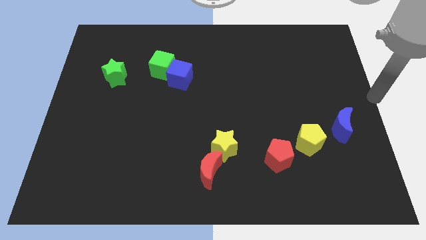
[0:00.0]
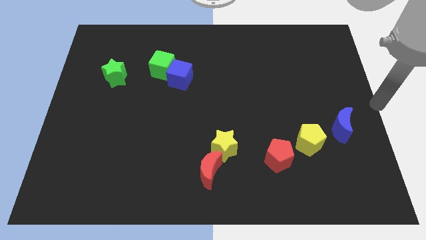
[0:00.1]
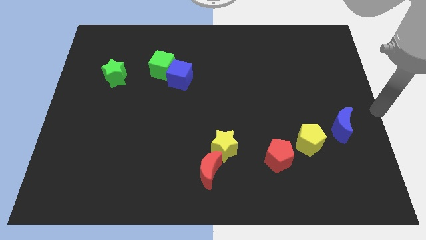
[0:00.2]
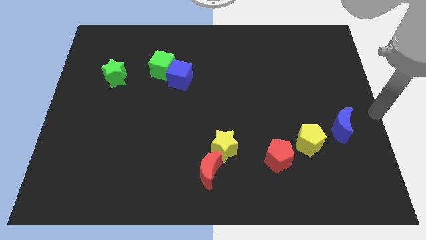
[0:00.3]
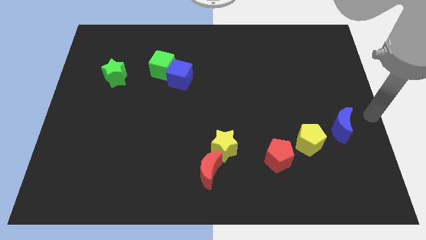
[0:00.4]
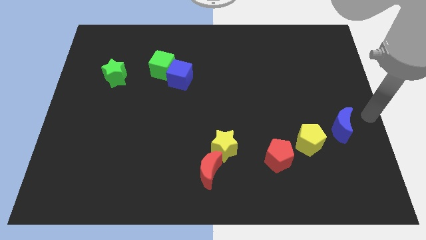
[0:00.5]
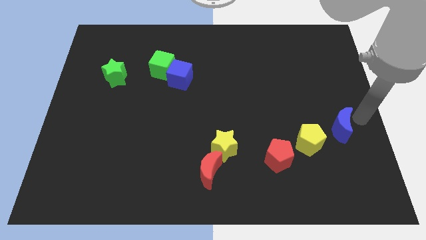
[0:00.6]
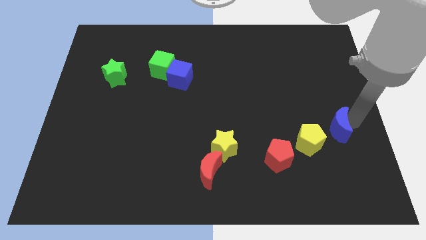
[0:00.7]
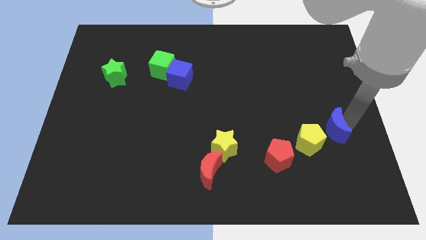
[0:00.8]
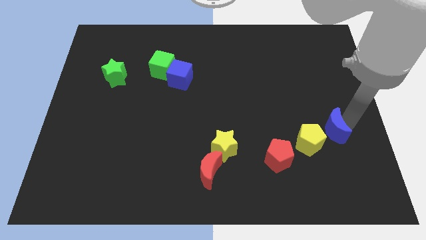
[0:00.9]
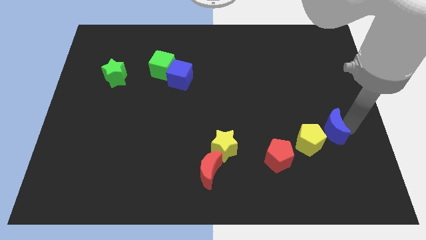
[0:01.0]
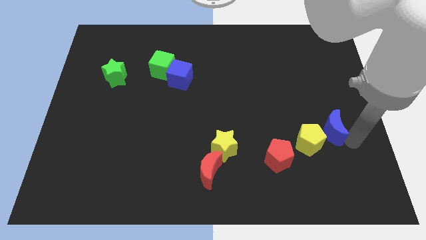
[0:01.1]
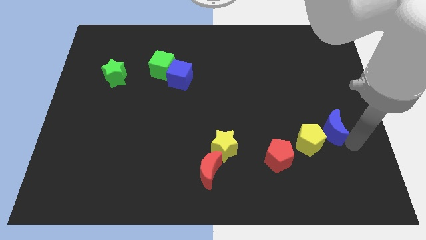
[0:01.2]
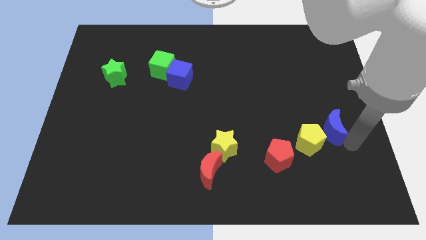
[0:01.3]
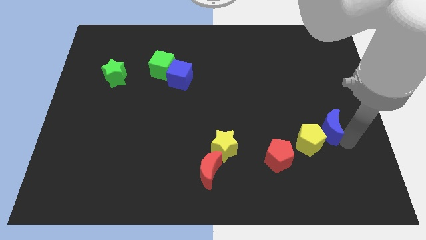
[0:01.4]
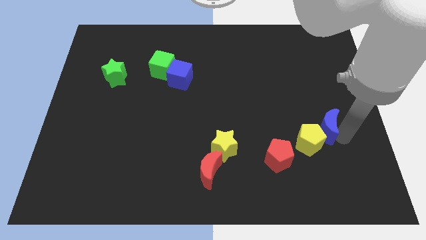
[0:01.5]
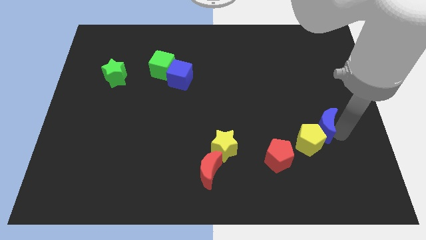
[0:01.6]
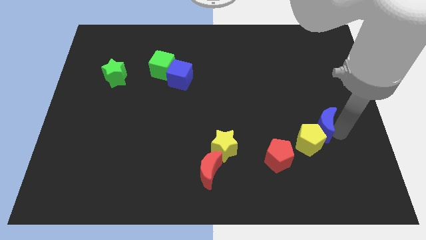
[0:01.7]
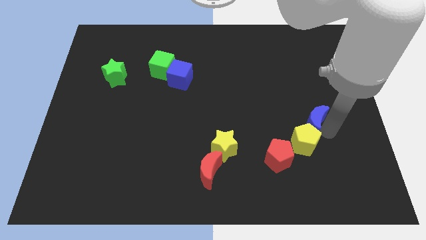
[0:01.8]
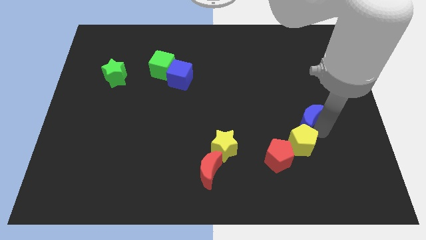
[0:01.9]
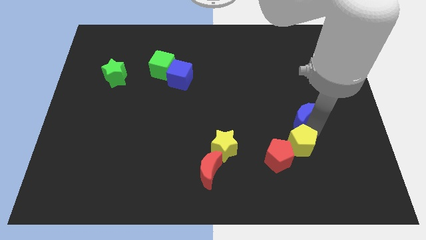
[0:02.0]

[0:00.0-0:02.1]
move blue moon into yellow pentagon

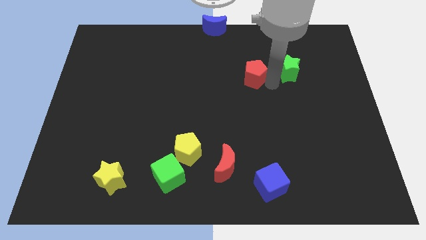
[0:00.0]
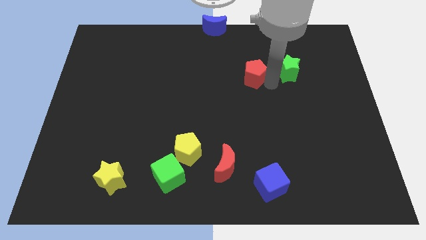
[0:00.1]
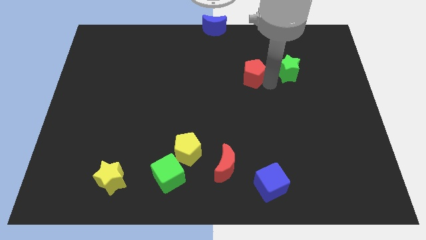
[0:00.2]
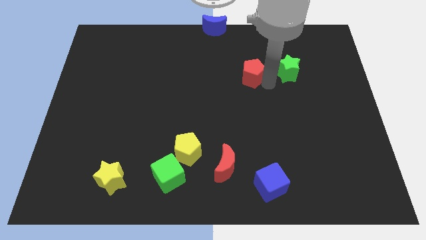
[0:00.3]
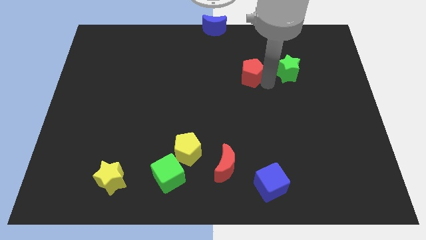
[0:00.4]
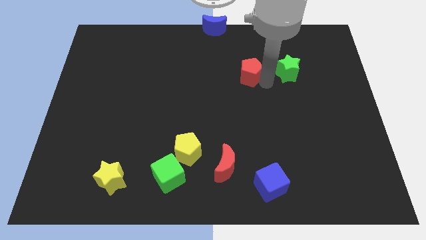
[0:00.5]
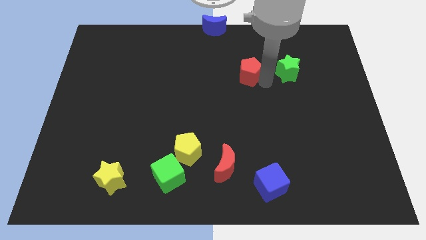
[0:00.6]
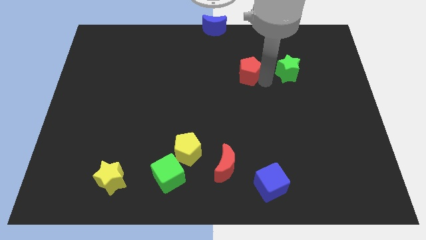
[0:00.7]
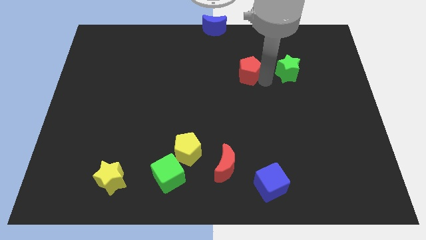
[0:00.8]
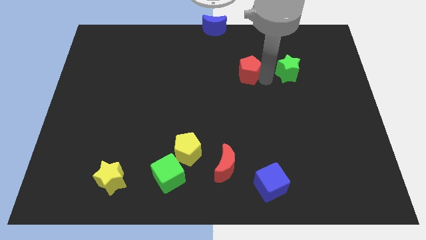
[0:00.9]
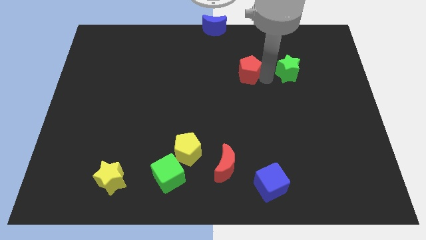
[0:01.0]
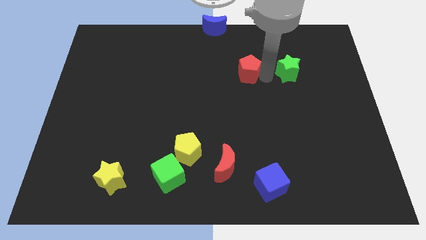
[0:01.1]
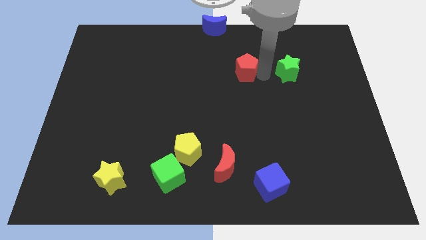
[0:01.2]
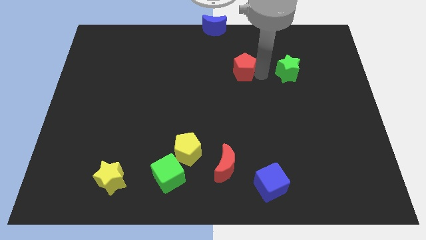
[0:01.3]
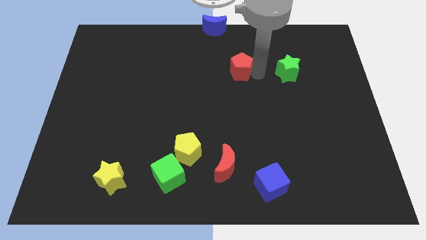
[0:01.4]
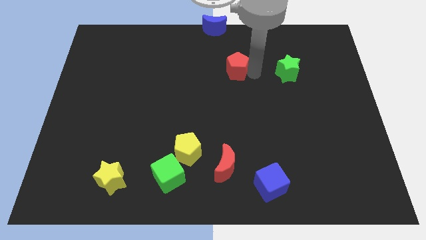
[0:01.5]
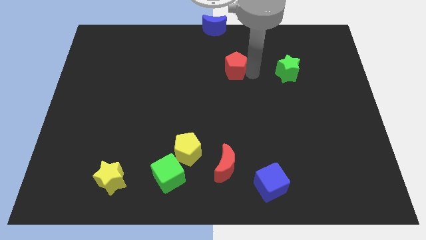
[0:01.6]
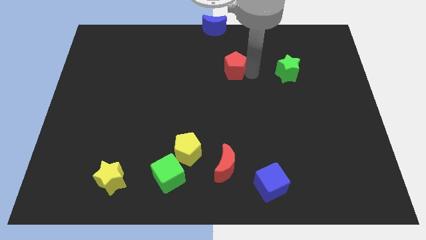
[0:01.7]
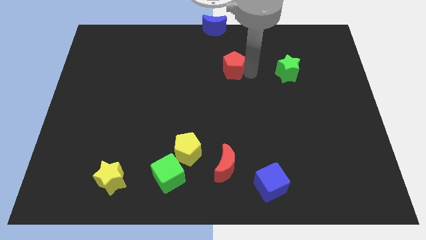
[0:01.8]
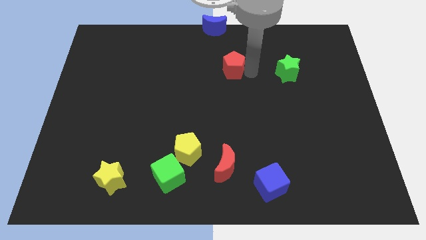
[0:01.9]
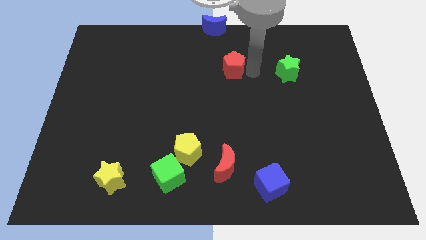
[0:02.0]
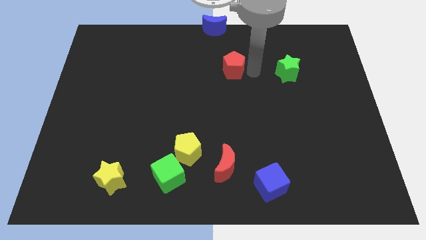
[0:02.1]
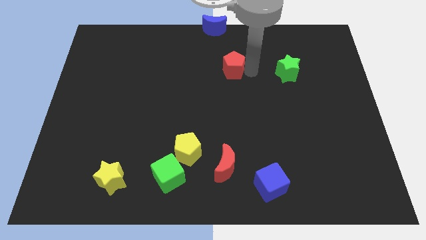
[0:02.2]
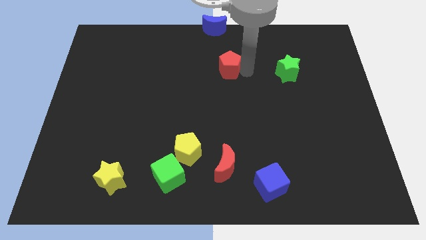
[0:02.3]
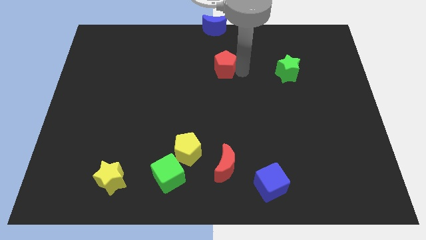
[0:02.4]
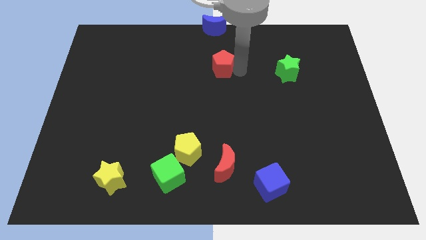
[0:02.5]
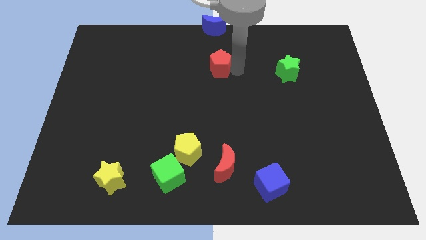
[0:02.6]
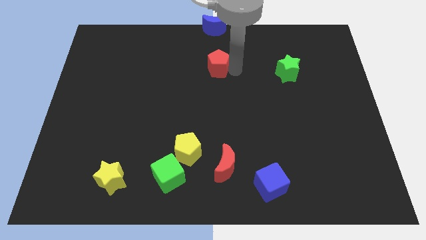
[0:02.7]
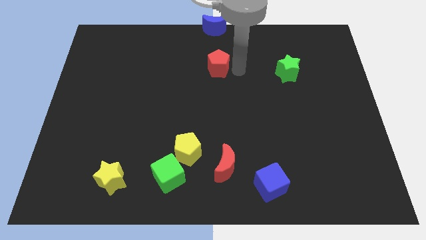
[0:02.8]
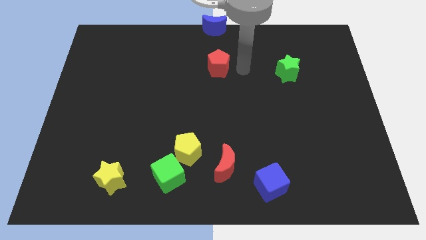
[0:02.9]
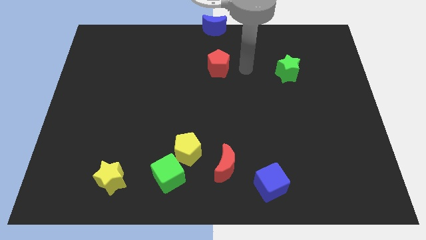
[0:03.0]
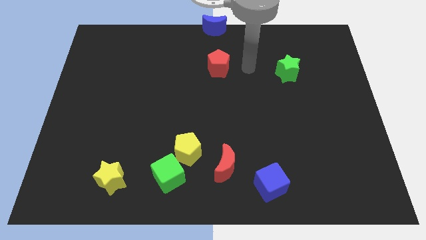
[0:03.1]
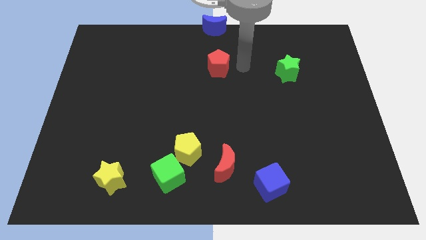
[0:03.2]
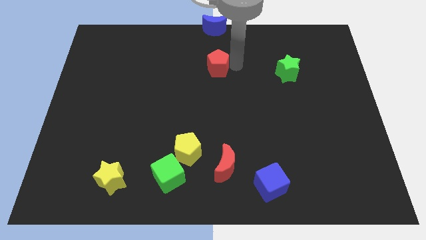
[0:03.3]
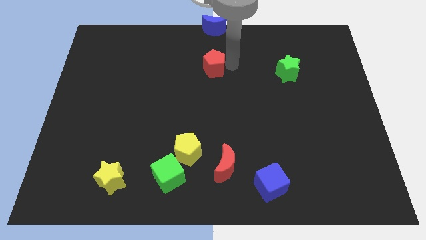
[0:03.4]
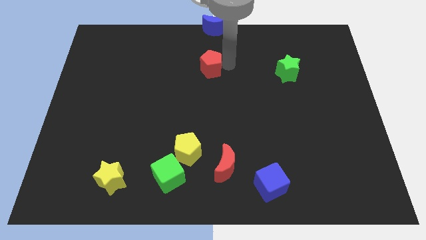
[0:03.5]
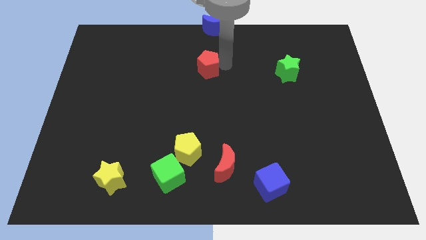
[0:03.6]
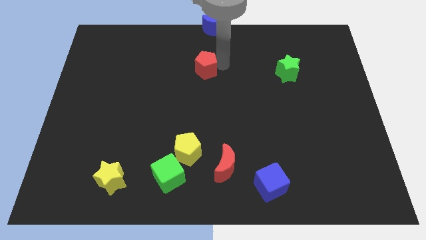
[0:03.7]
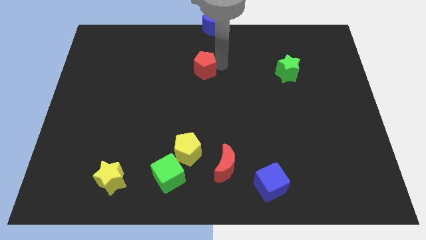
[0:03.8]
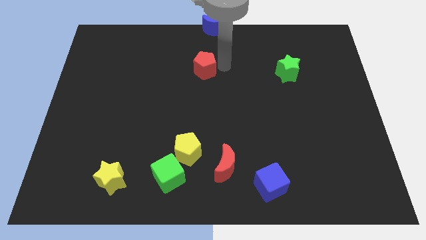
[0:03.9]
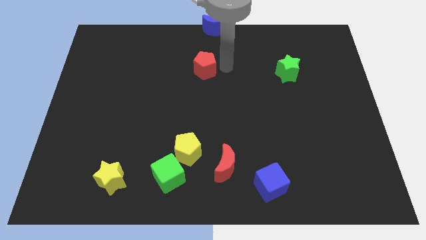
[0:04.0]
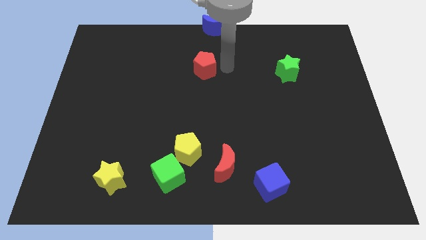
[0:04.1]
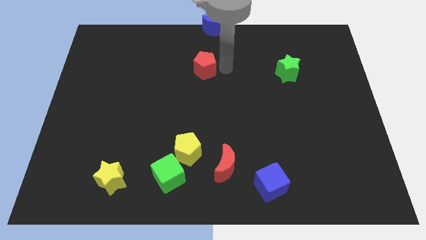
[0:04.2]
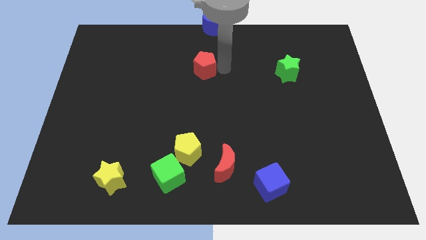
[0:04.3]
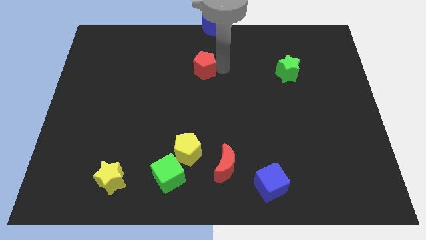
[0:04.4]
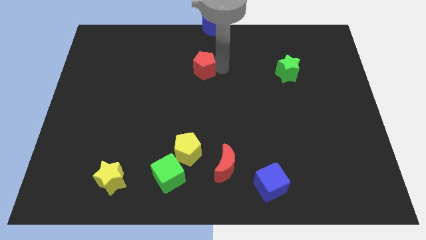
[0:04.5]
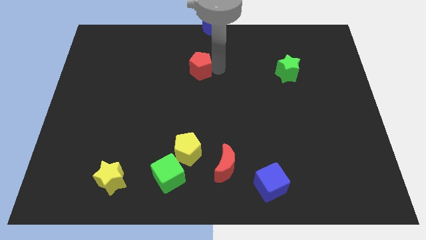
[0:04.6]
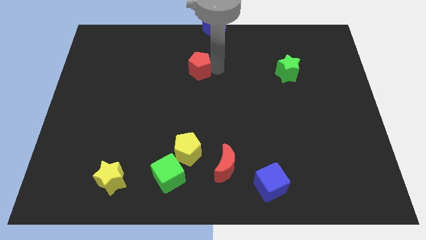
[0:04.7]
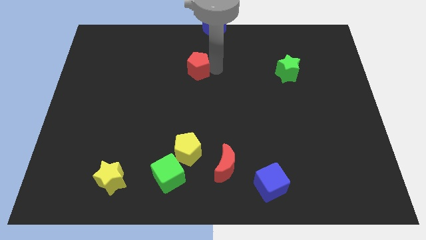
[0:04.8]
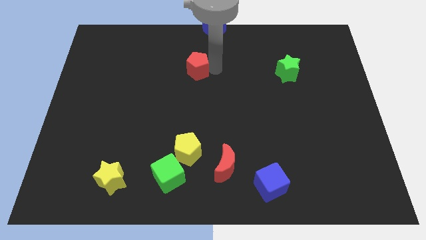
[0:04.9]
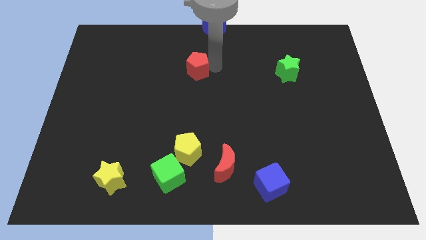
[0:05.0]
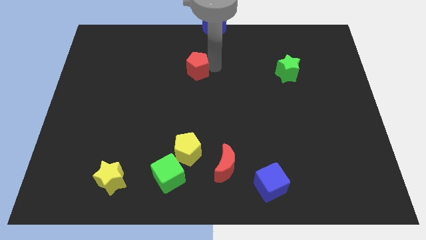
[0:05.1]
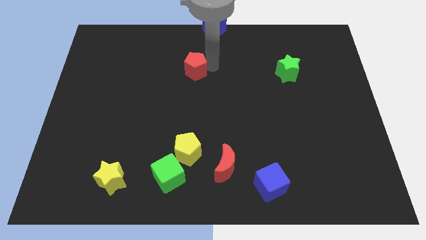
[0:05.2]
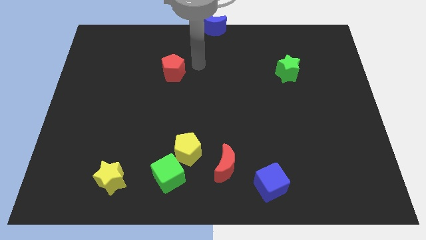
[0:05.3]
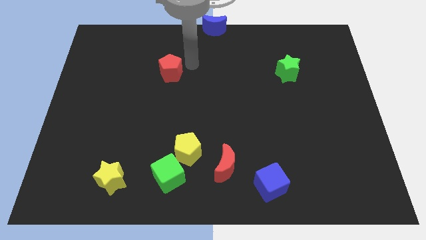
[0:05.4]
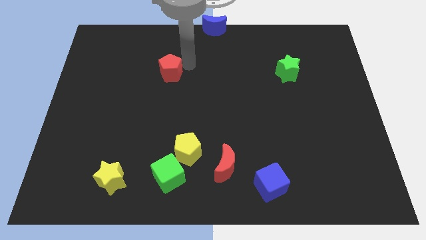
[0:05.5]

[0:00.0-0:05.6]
place the red pentagon above the yellow pentagon

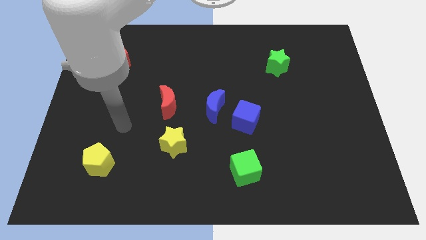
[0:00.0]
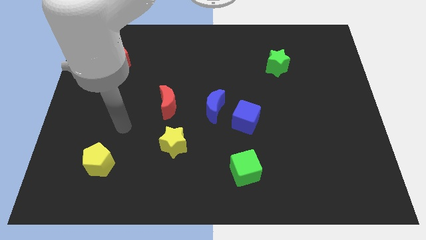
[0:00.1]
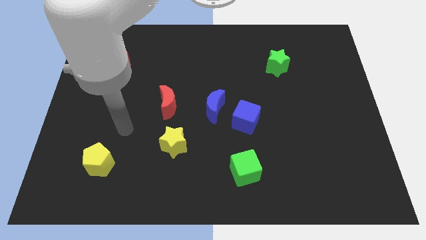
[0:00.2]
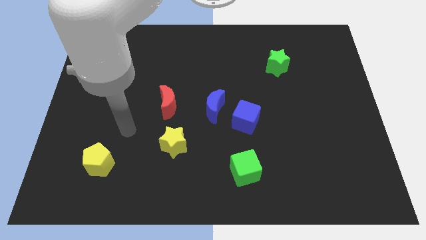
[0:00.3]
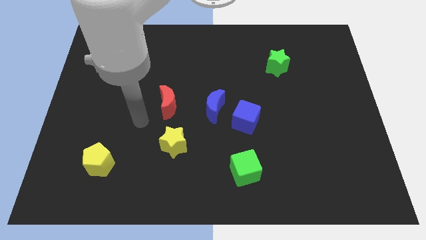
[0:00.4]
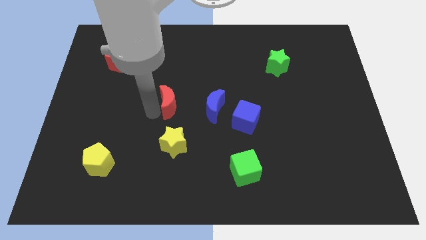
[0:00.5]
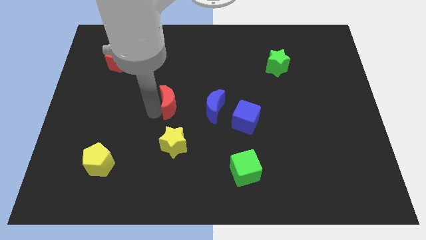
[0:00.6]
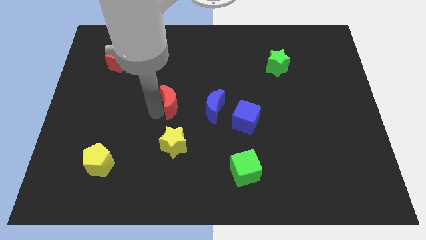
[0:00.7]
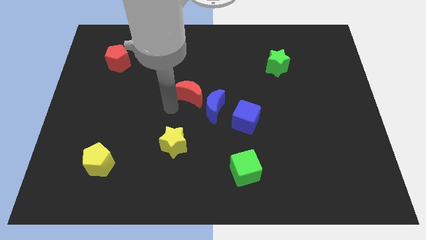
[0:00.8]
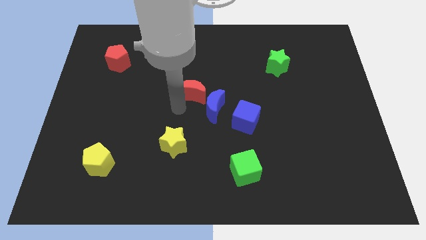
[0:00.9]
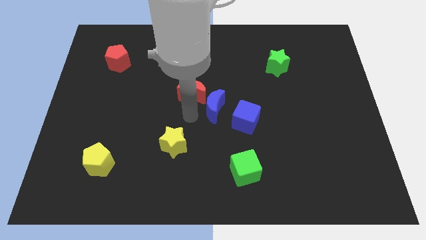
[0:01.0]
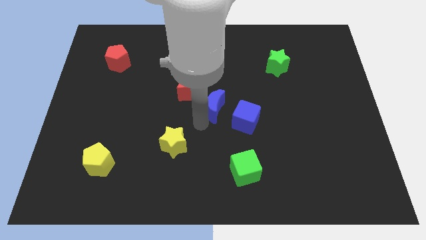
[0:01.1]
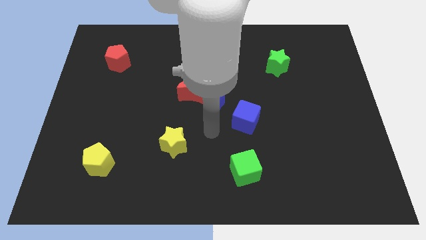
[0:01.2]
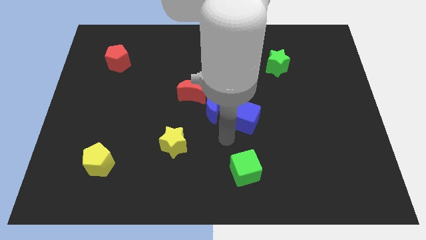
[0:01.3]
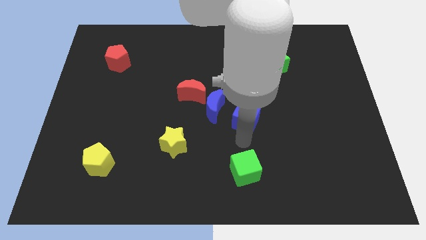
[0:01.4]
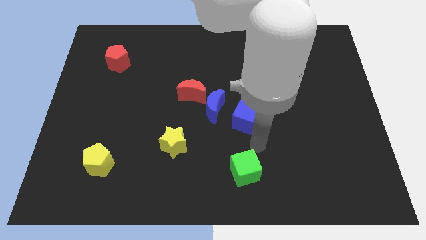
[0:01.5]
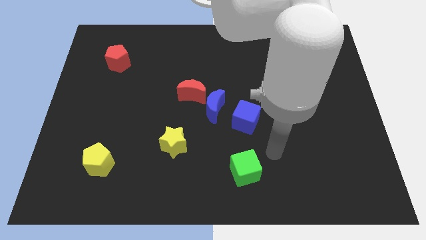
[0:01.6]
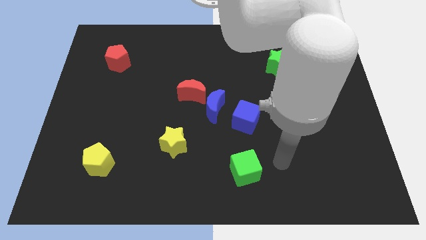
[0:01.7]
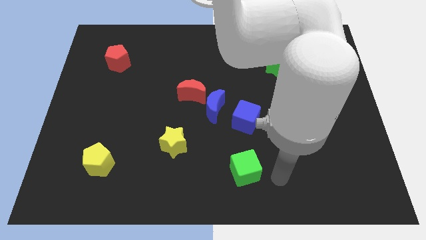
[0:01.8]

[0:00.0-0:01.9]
point your arm at the right side of the green cube
